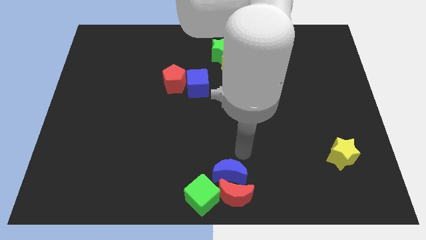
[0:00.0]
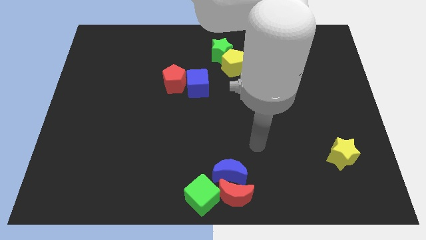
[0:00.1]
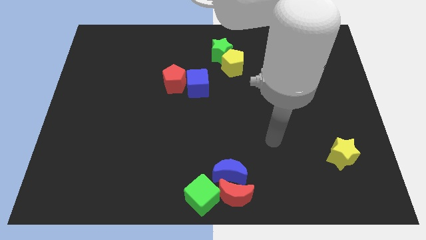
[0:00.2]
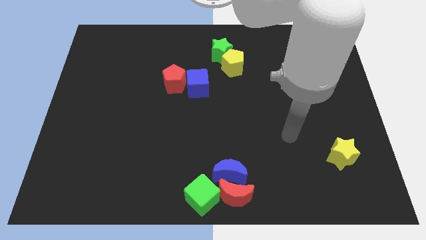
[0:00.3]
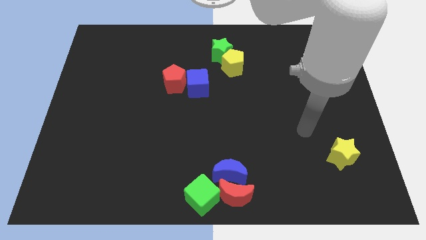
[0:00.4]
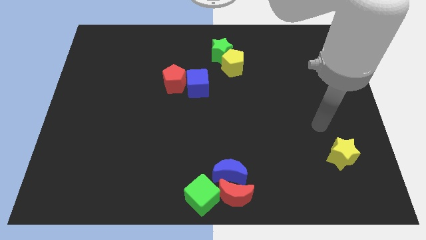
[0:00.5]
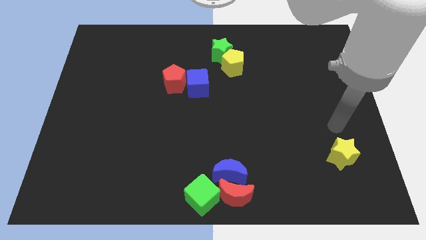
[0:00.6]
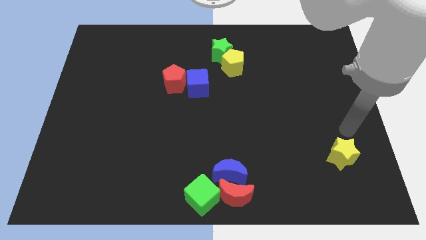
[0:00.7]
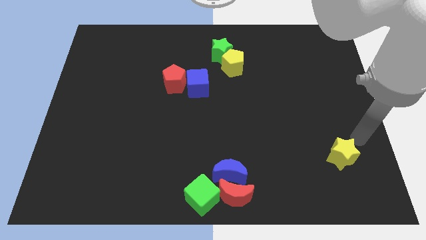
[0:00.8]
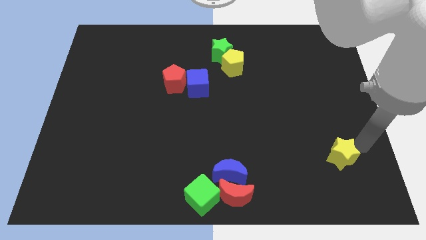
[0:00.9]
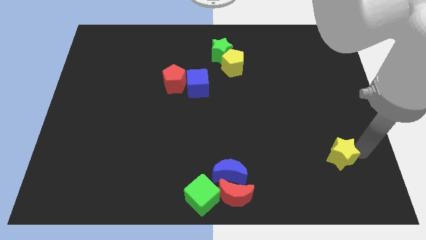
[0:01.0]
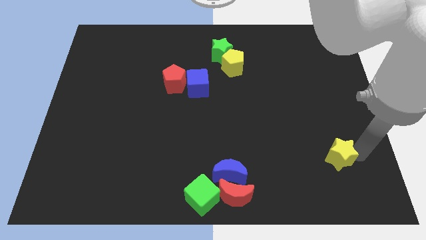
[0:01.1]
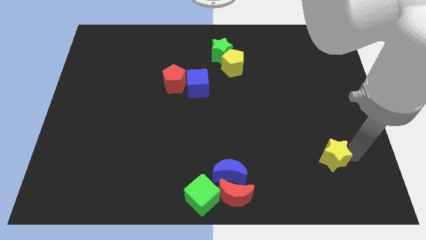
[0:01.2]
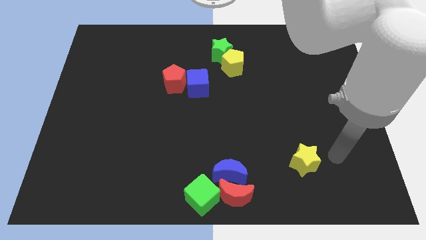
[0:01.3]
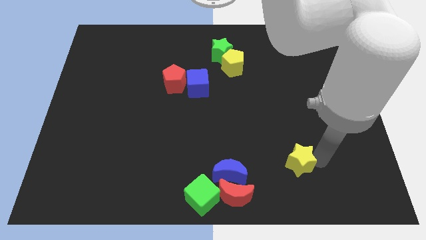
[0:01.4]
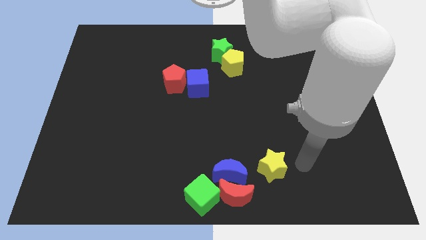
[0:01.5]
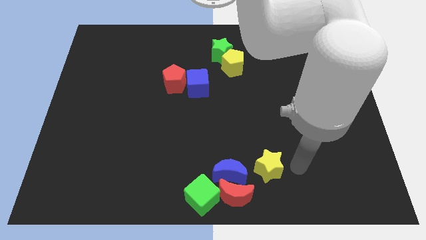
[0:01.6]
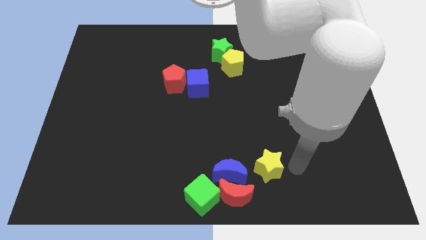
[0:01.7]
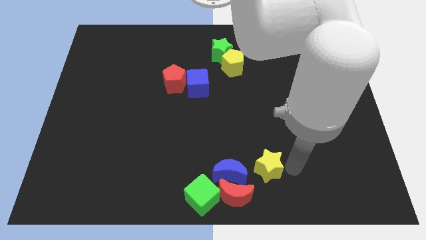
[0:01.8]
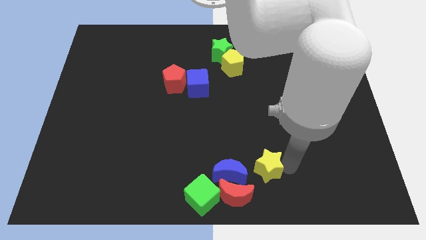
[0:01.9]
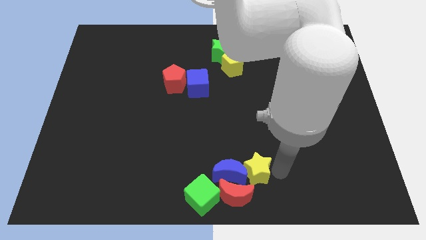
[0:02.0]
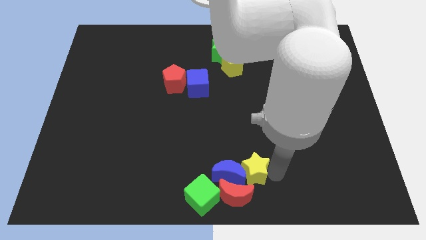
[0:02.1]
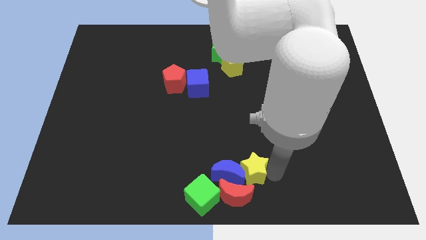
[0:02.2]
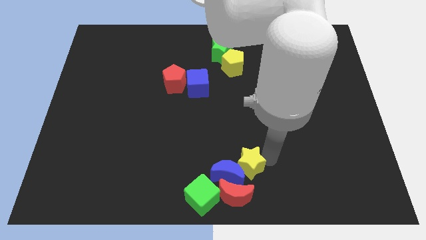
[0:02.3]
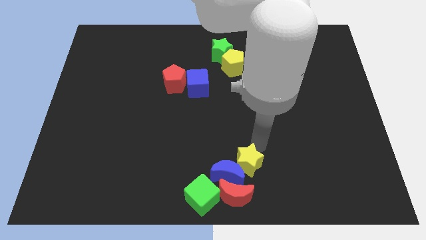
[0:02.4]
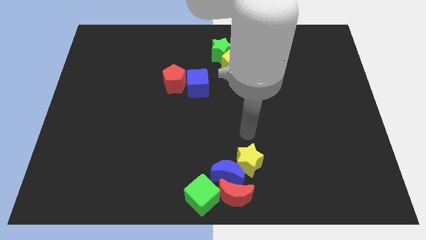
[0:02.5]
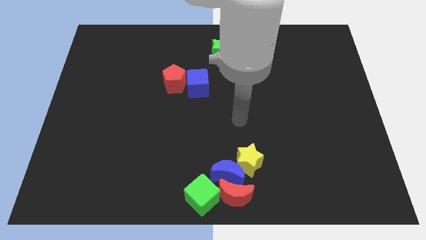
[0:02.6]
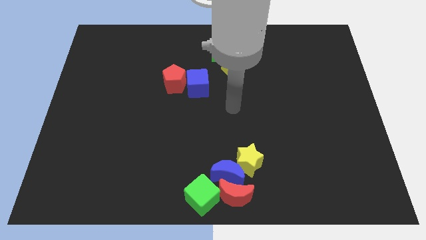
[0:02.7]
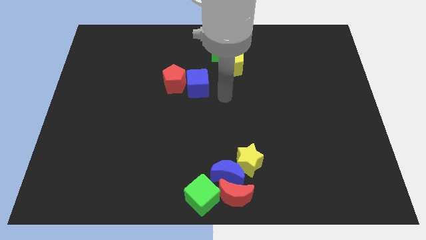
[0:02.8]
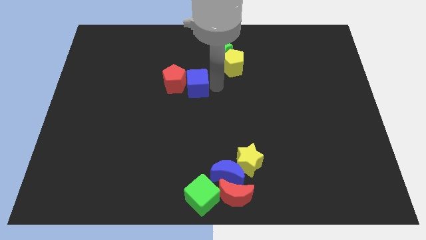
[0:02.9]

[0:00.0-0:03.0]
push the yellow star towards the group of blocks

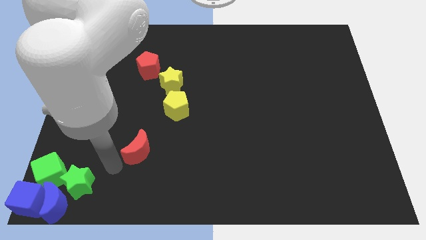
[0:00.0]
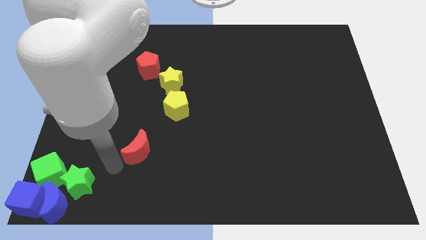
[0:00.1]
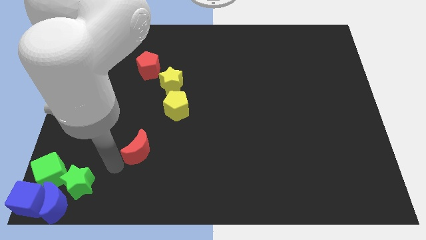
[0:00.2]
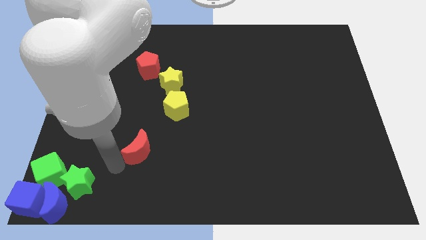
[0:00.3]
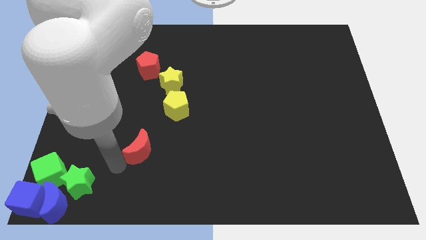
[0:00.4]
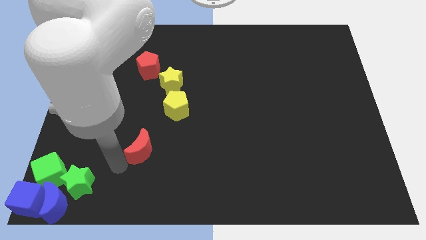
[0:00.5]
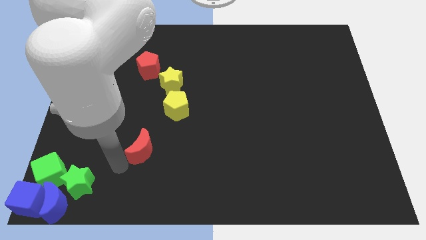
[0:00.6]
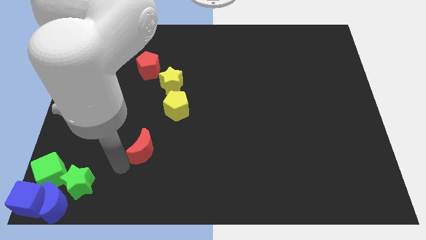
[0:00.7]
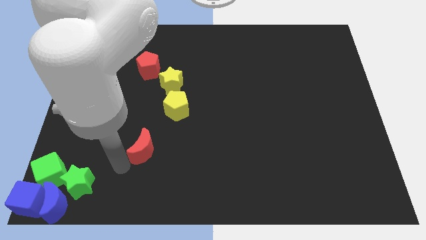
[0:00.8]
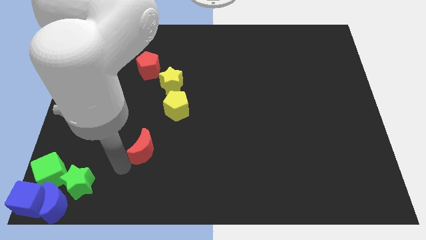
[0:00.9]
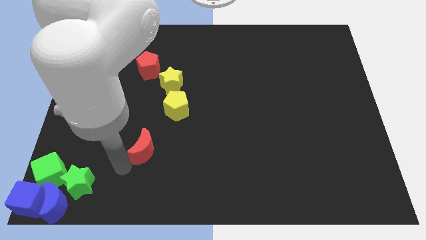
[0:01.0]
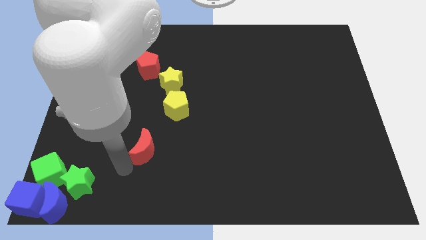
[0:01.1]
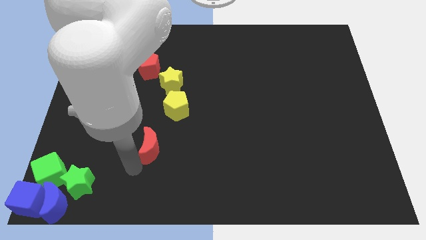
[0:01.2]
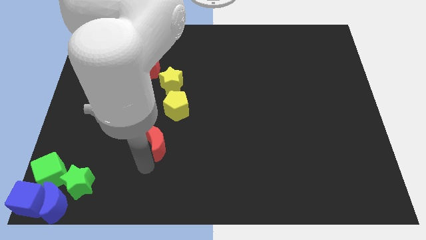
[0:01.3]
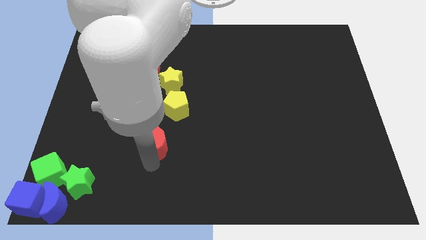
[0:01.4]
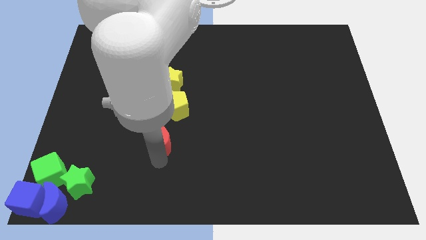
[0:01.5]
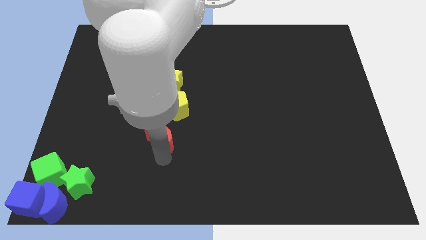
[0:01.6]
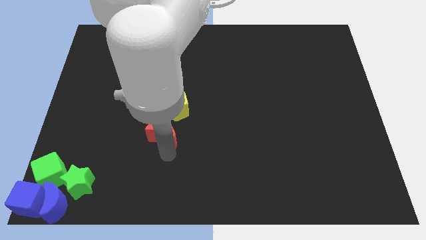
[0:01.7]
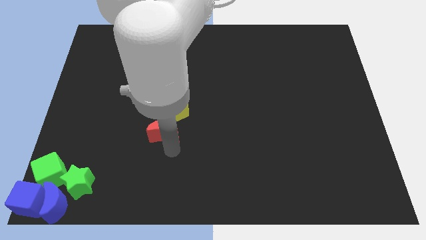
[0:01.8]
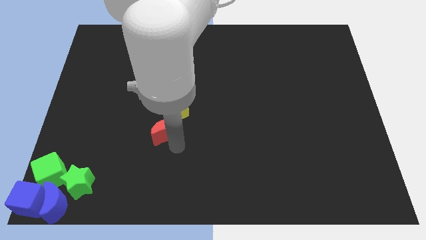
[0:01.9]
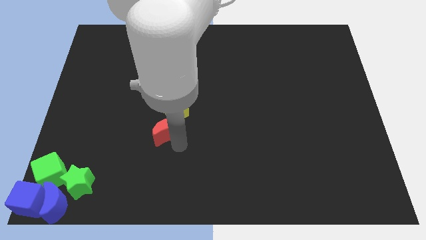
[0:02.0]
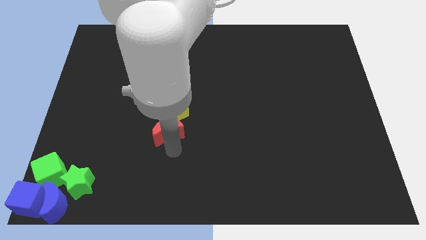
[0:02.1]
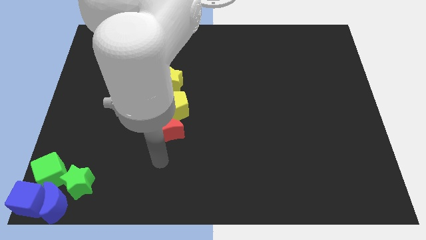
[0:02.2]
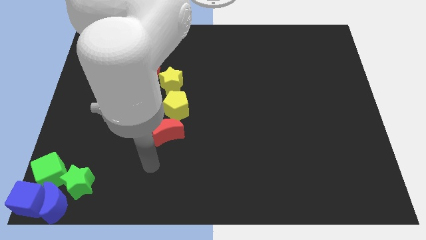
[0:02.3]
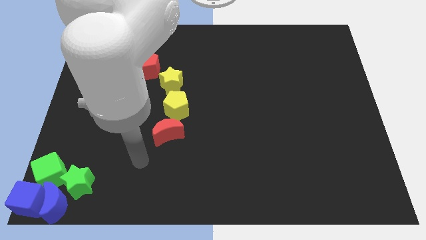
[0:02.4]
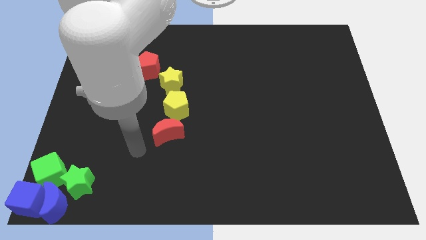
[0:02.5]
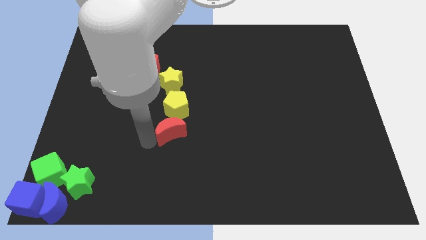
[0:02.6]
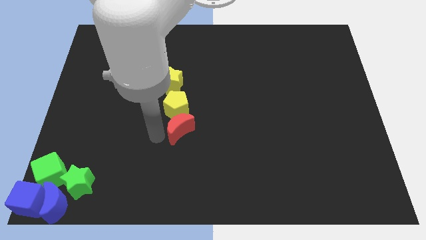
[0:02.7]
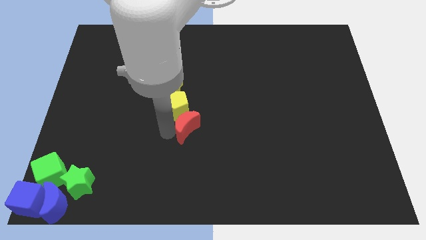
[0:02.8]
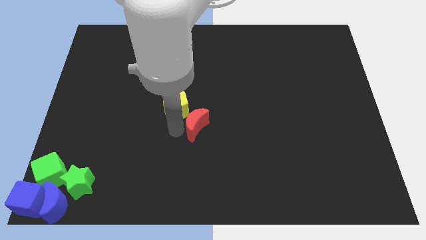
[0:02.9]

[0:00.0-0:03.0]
push the red moon to the bottom of yellow pentagon

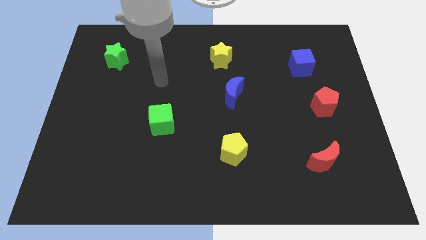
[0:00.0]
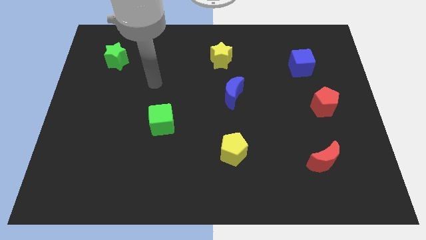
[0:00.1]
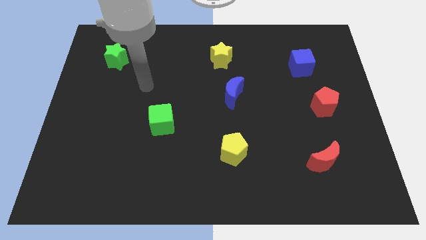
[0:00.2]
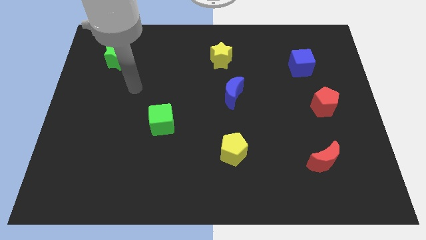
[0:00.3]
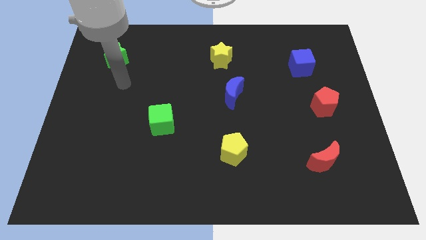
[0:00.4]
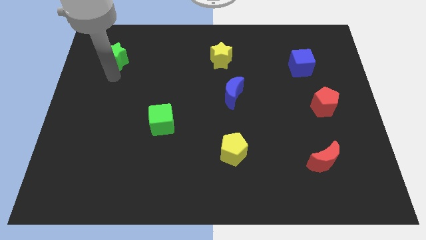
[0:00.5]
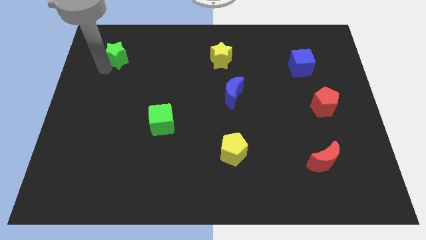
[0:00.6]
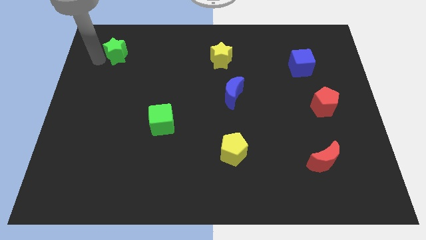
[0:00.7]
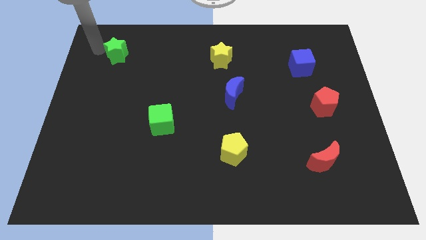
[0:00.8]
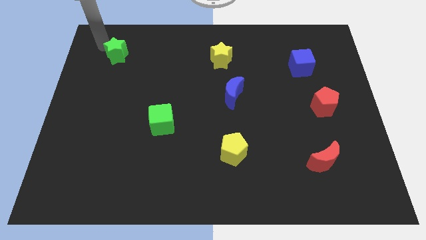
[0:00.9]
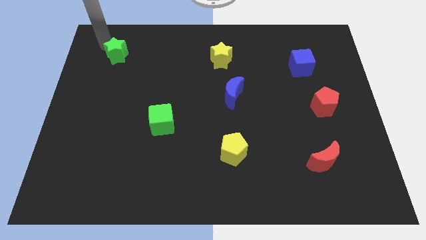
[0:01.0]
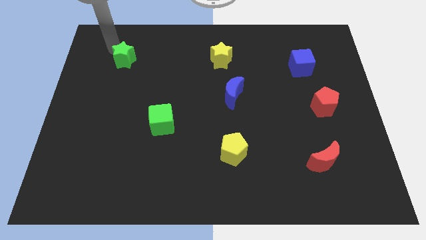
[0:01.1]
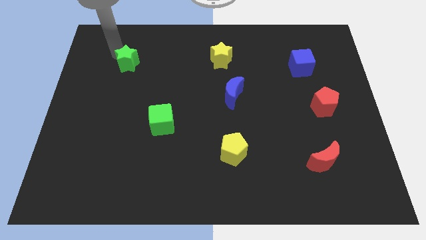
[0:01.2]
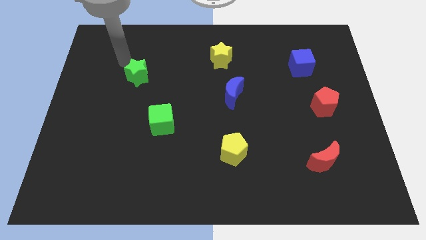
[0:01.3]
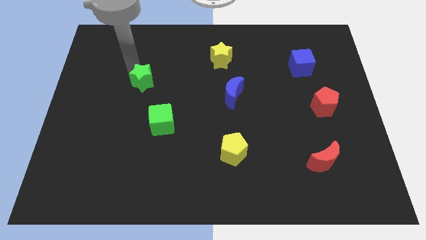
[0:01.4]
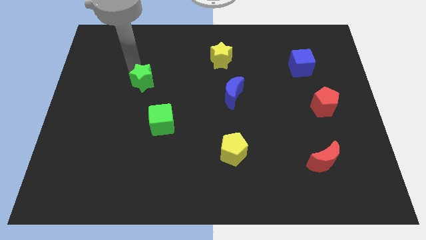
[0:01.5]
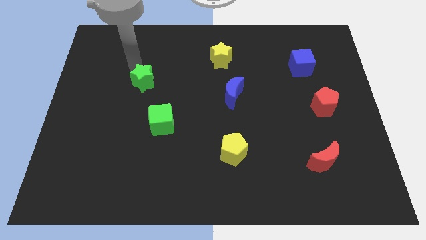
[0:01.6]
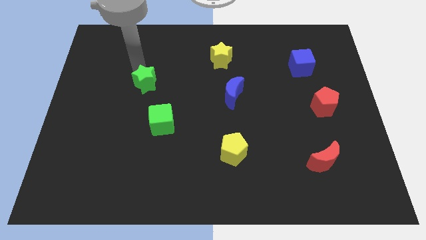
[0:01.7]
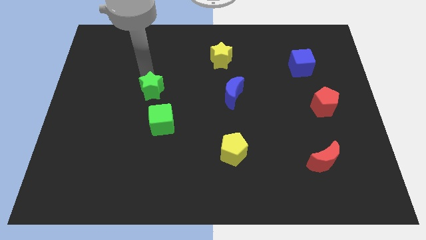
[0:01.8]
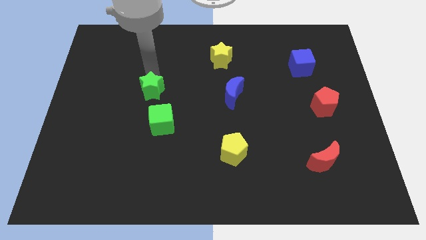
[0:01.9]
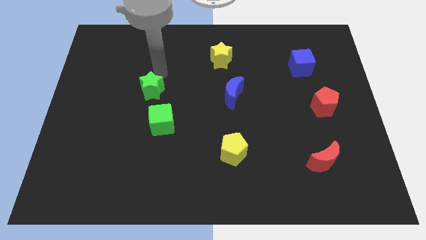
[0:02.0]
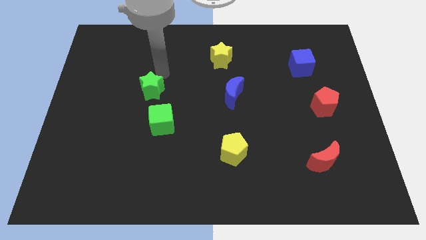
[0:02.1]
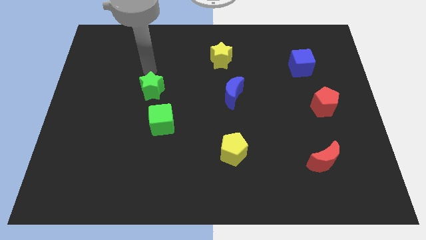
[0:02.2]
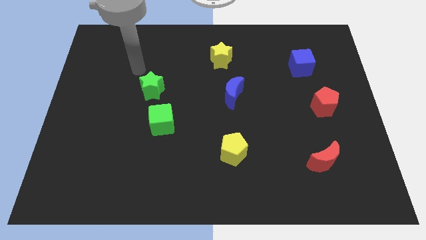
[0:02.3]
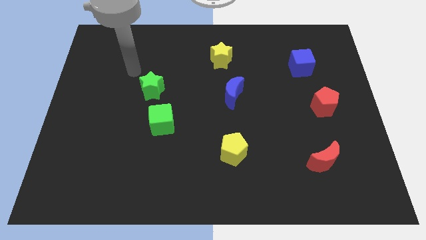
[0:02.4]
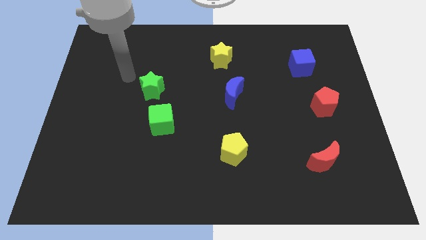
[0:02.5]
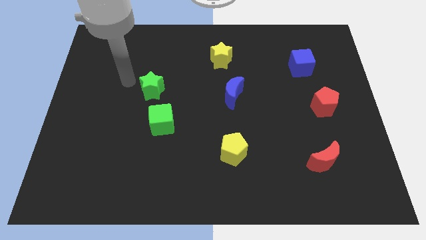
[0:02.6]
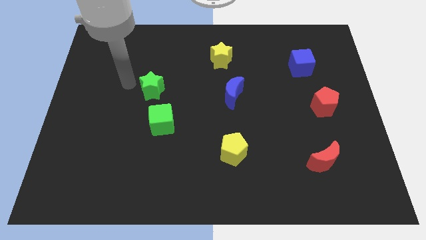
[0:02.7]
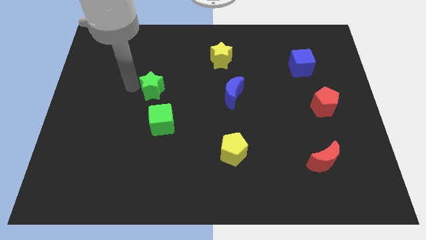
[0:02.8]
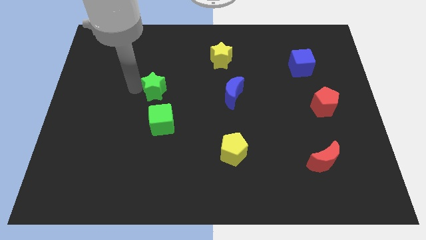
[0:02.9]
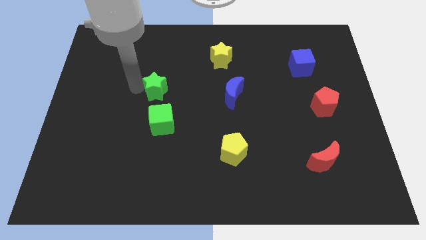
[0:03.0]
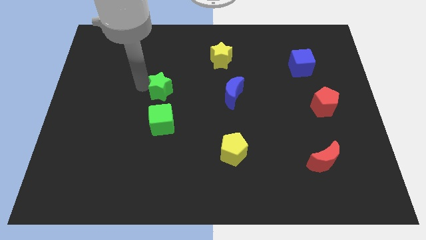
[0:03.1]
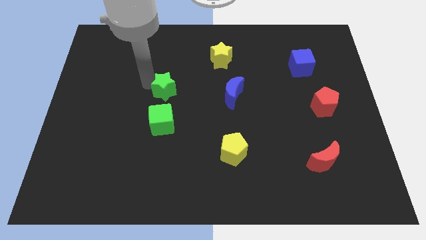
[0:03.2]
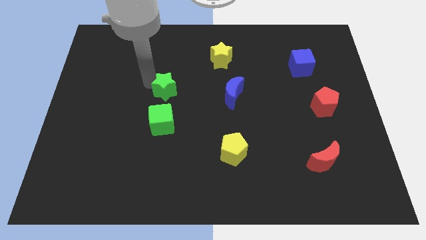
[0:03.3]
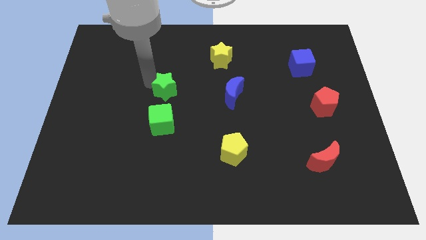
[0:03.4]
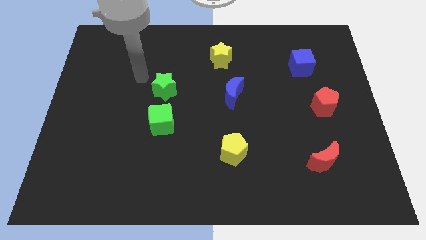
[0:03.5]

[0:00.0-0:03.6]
place the green star above the green cube
